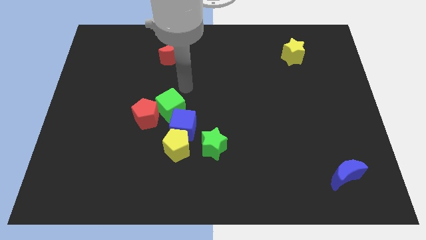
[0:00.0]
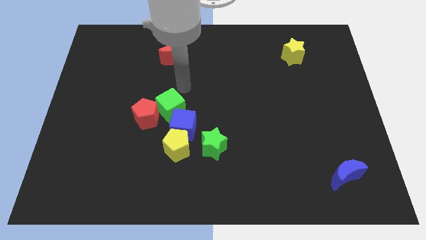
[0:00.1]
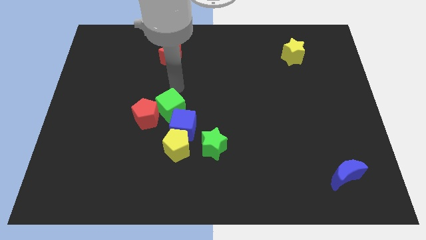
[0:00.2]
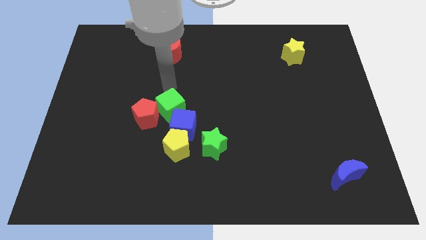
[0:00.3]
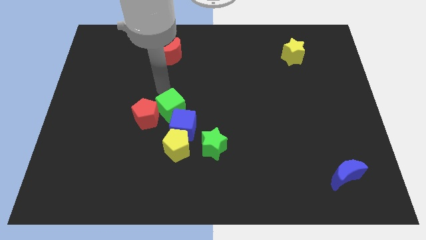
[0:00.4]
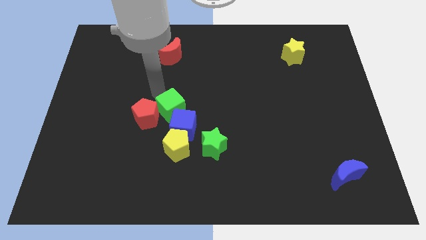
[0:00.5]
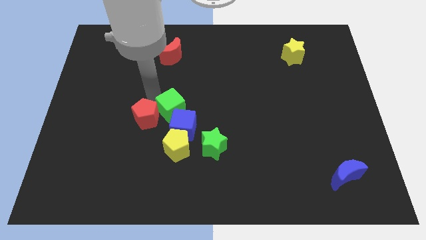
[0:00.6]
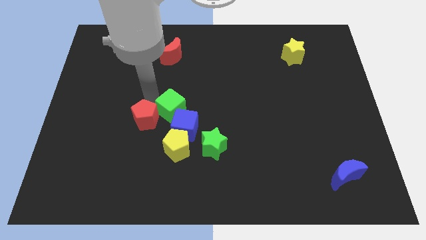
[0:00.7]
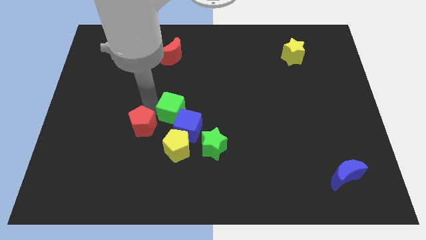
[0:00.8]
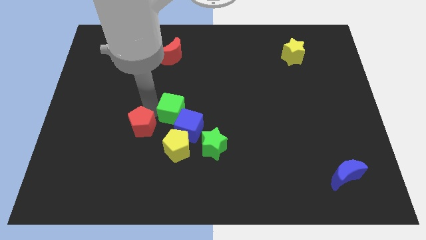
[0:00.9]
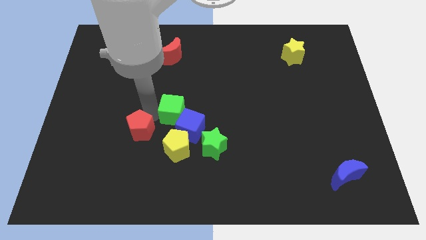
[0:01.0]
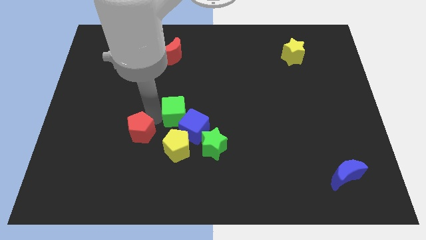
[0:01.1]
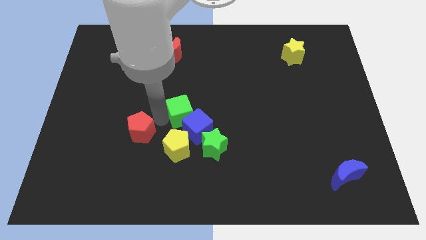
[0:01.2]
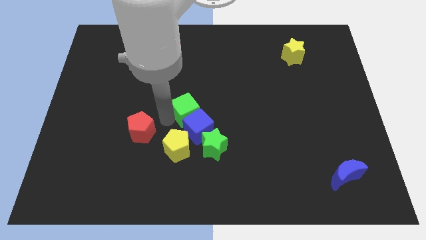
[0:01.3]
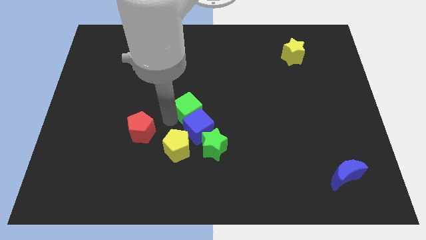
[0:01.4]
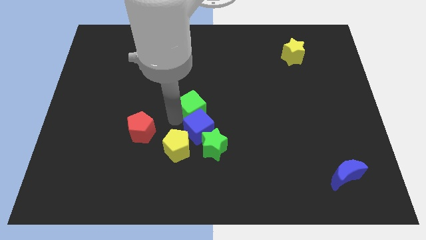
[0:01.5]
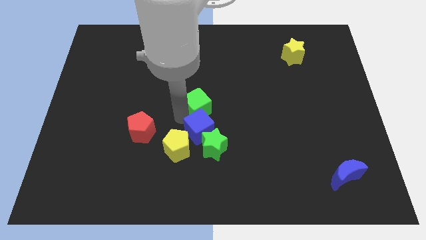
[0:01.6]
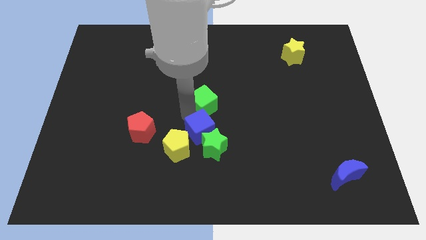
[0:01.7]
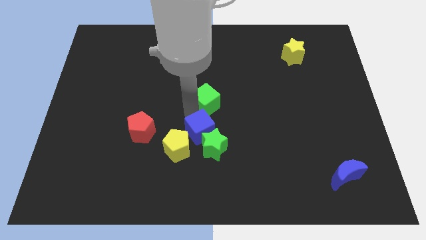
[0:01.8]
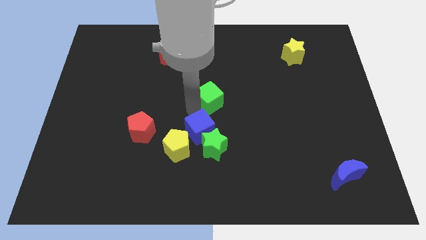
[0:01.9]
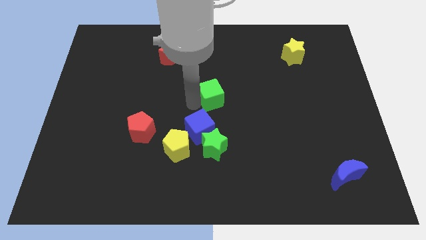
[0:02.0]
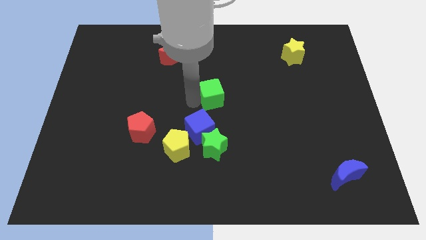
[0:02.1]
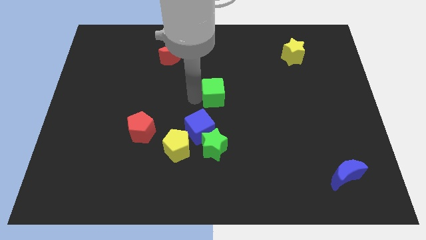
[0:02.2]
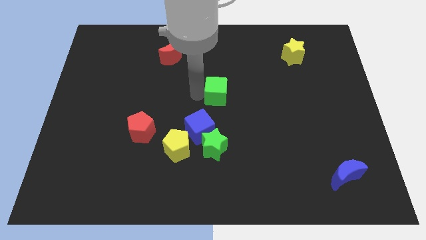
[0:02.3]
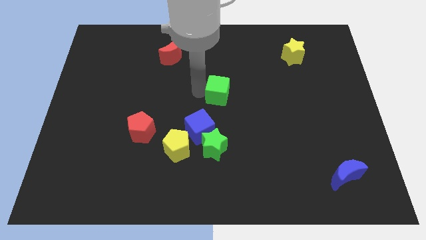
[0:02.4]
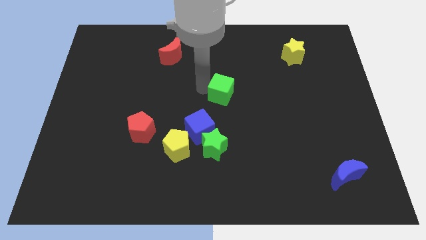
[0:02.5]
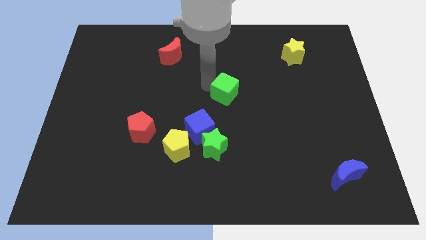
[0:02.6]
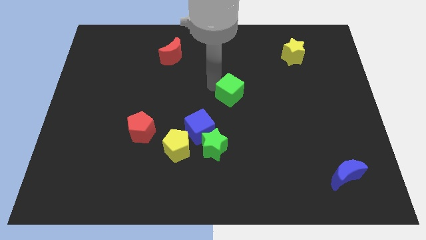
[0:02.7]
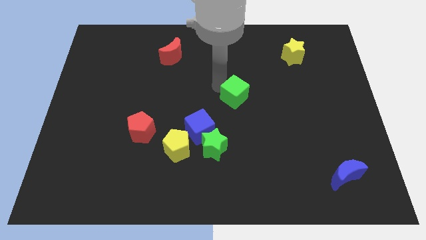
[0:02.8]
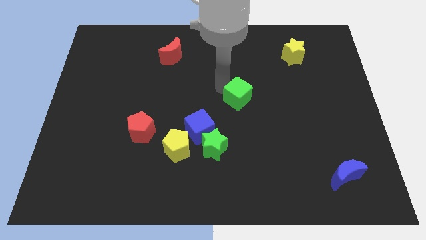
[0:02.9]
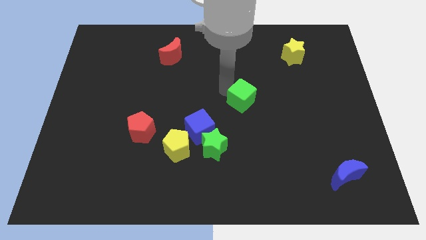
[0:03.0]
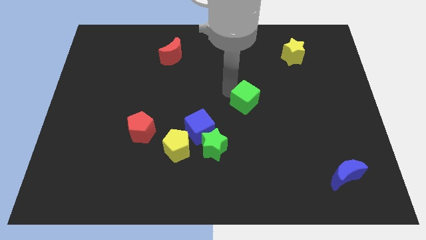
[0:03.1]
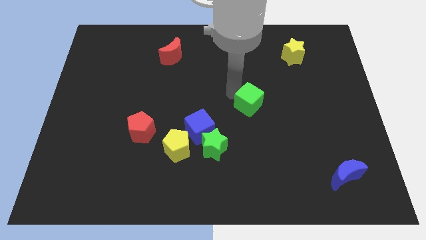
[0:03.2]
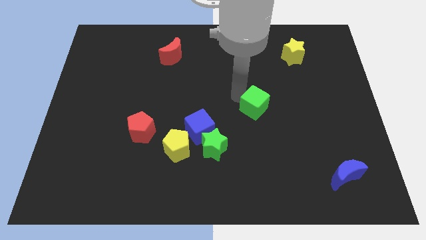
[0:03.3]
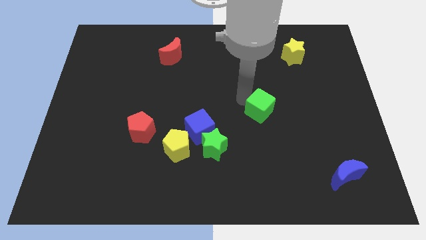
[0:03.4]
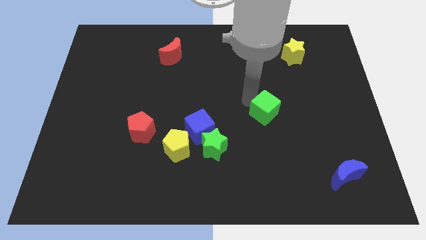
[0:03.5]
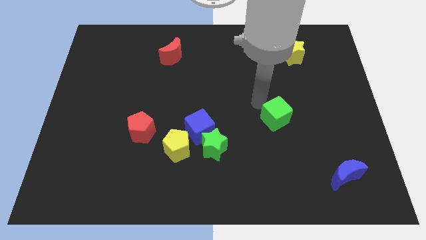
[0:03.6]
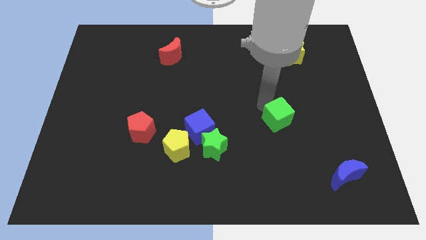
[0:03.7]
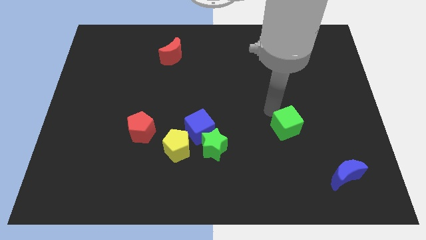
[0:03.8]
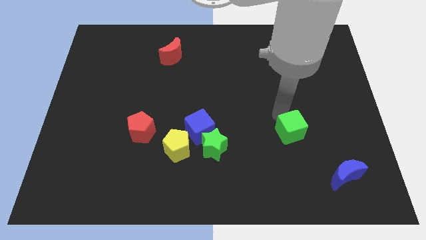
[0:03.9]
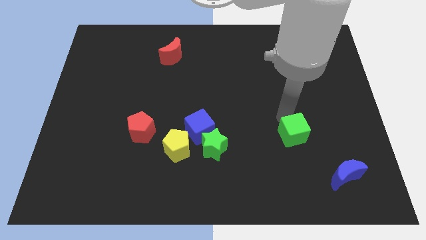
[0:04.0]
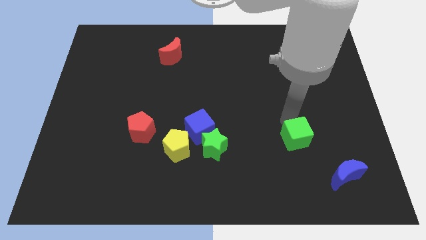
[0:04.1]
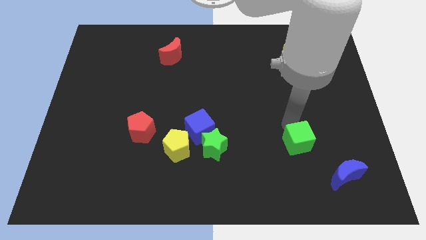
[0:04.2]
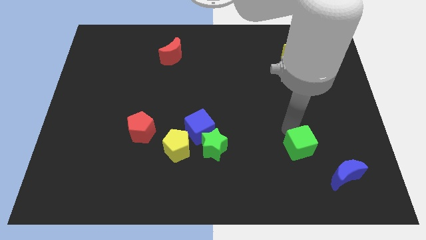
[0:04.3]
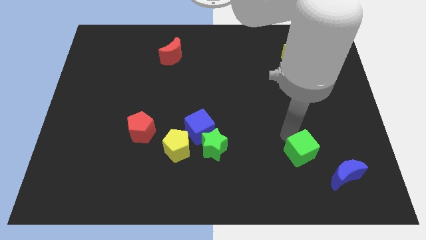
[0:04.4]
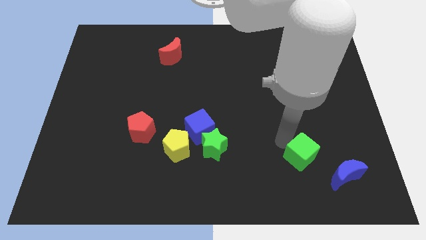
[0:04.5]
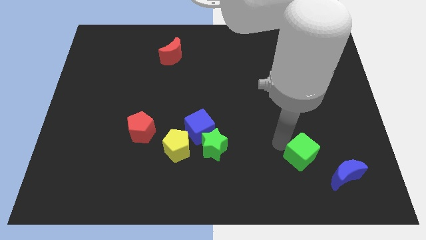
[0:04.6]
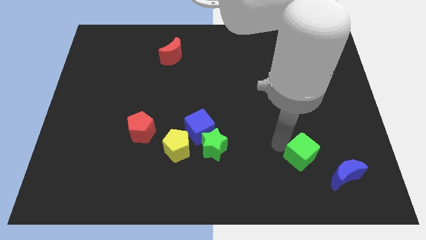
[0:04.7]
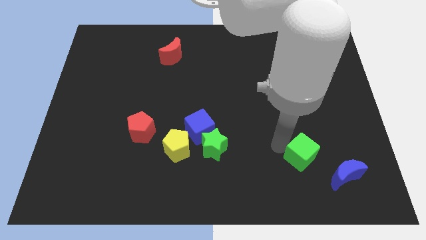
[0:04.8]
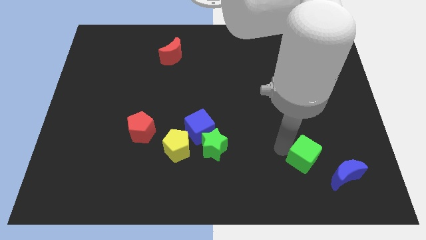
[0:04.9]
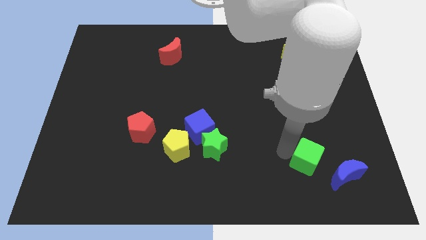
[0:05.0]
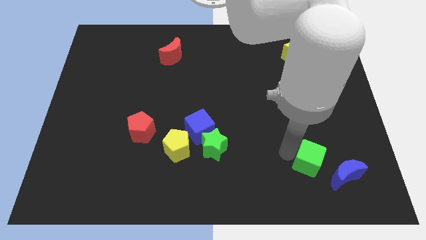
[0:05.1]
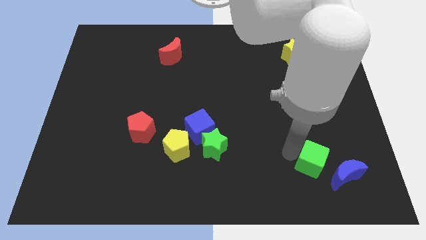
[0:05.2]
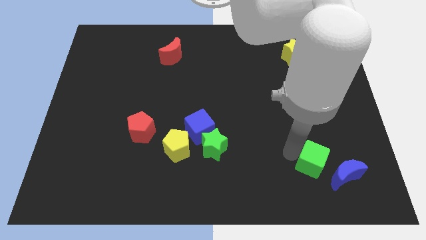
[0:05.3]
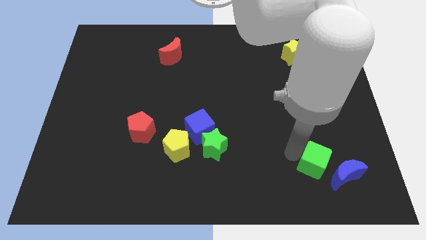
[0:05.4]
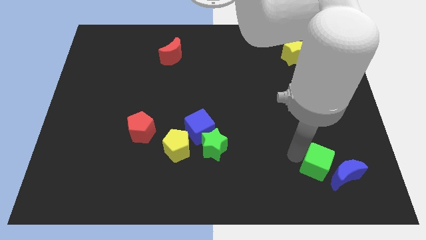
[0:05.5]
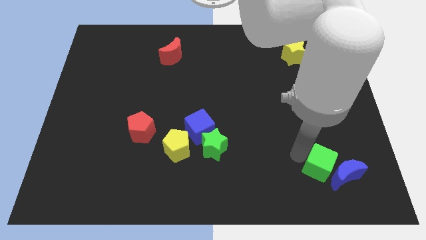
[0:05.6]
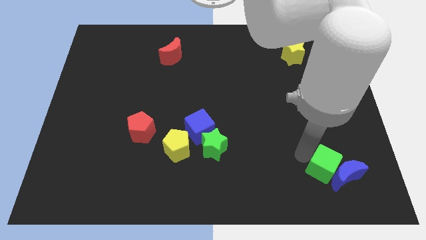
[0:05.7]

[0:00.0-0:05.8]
push the green cube towards the blue moon

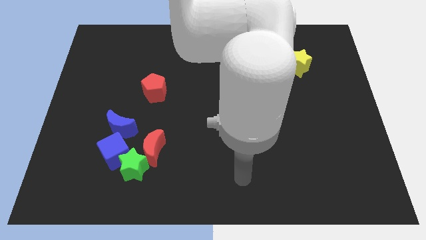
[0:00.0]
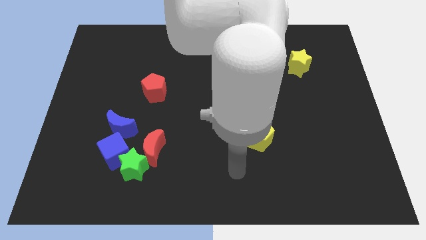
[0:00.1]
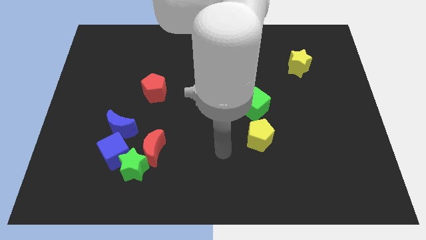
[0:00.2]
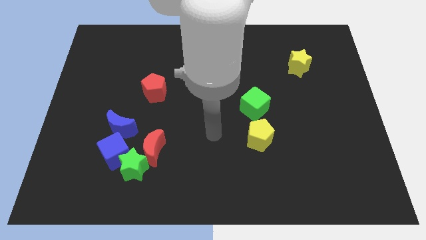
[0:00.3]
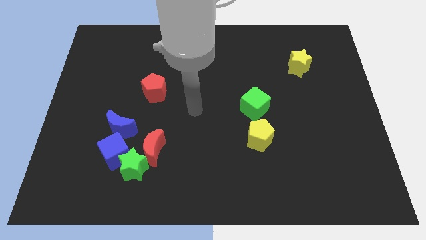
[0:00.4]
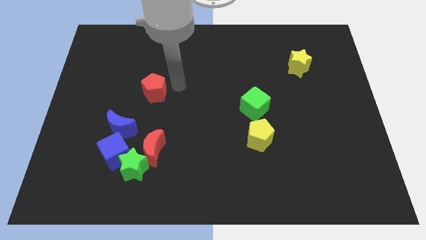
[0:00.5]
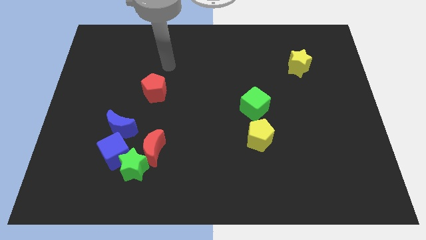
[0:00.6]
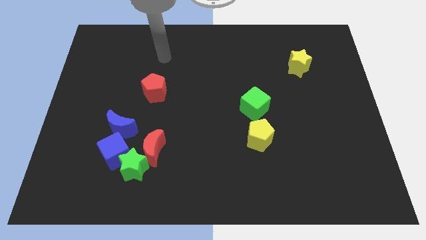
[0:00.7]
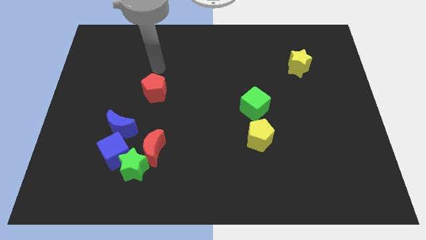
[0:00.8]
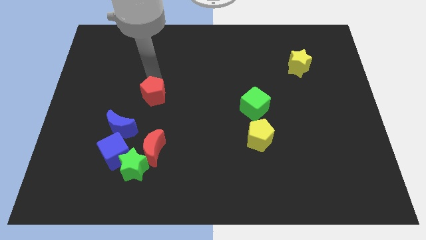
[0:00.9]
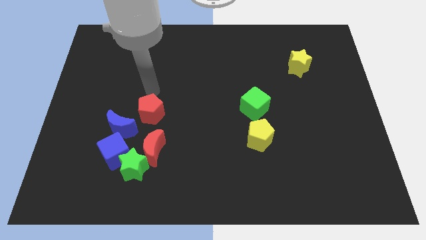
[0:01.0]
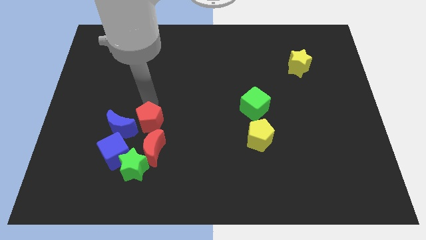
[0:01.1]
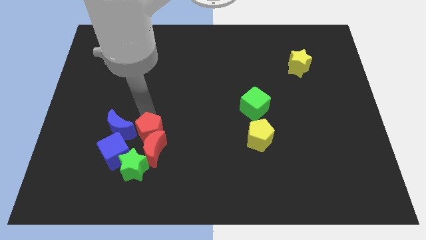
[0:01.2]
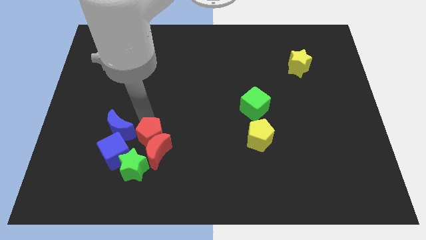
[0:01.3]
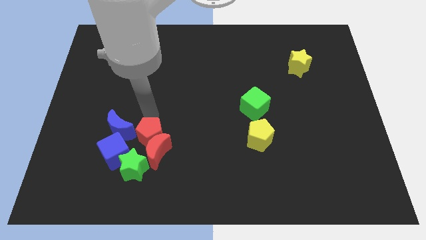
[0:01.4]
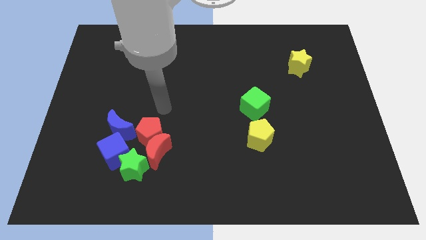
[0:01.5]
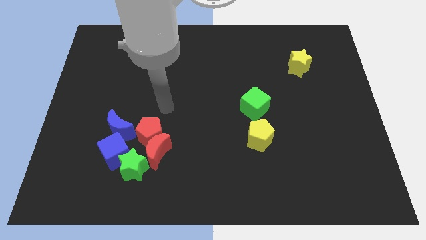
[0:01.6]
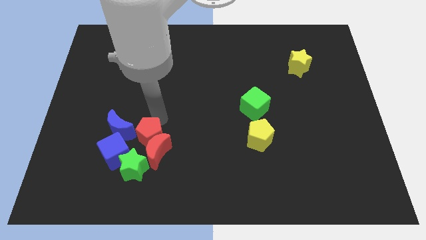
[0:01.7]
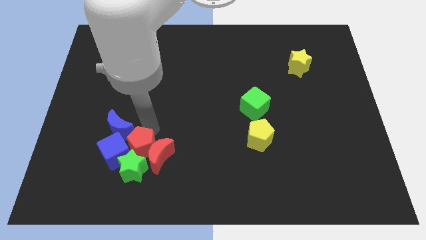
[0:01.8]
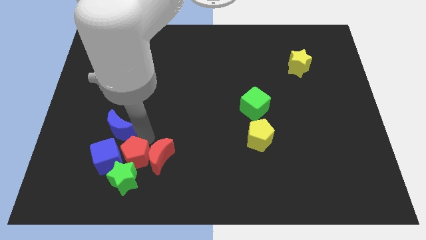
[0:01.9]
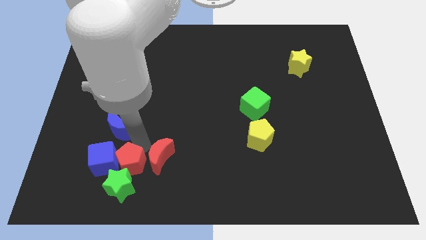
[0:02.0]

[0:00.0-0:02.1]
push the red pentagon towards the green star

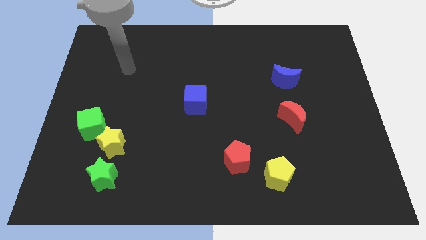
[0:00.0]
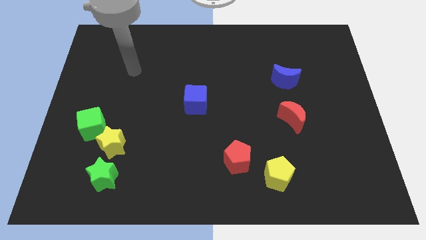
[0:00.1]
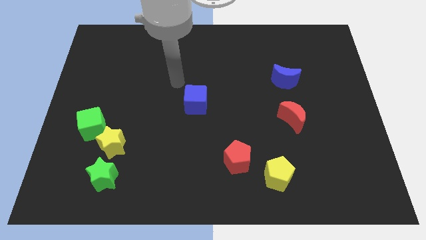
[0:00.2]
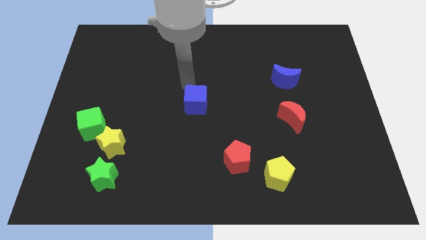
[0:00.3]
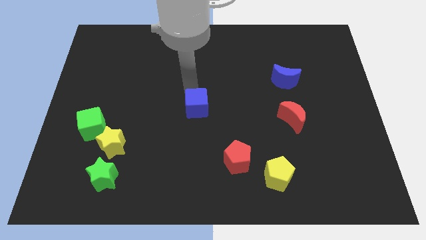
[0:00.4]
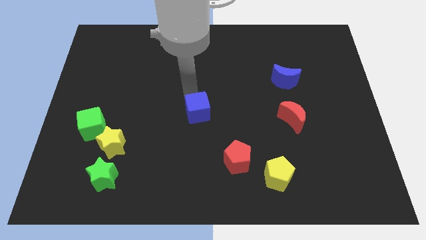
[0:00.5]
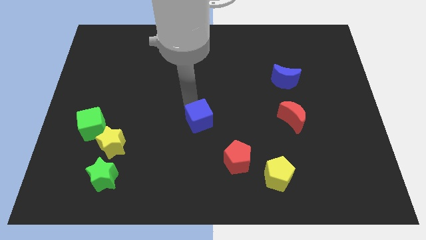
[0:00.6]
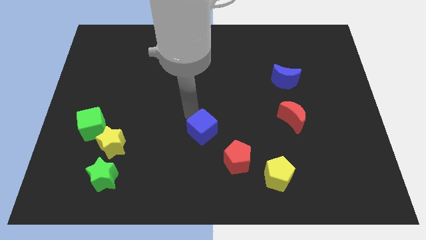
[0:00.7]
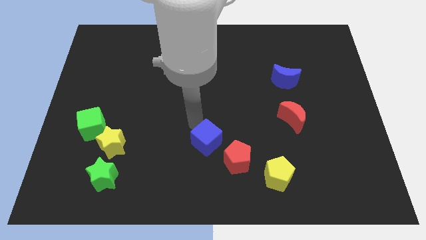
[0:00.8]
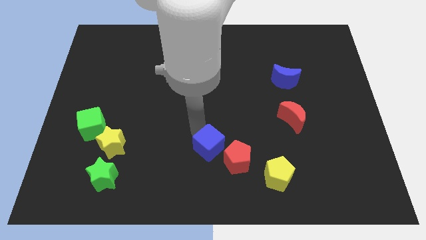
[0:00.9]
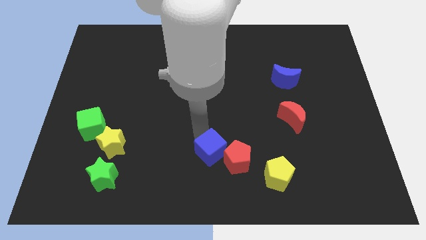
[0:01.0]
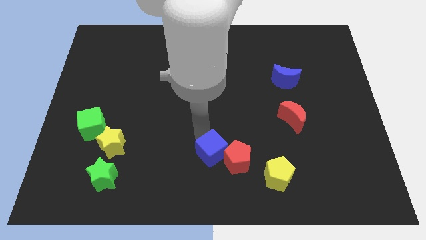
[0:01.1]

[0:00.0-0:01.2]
slide the blue cube next to the red pentagon
